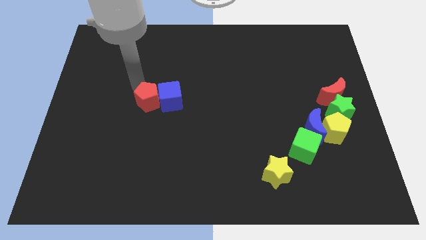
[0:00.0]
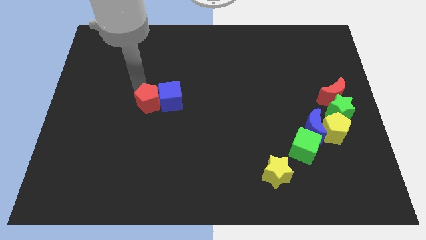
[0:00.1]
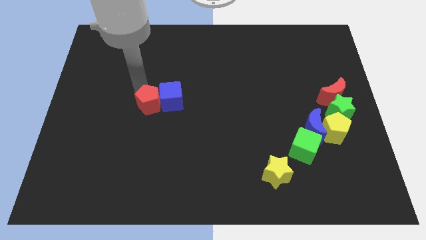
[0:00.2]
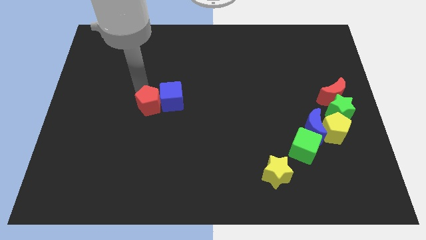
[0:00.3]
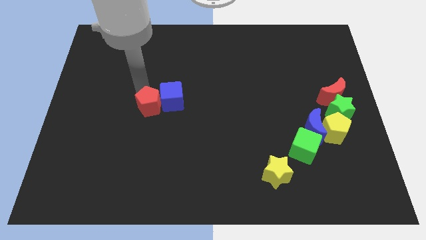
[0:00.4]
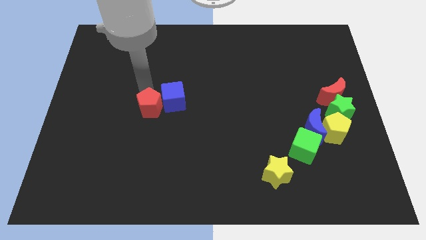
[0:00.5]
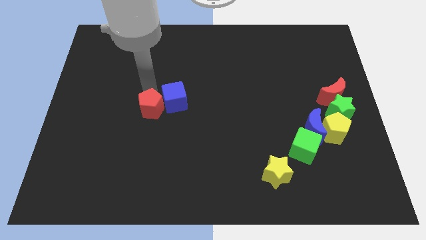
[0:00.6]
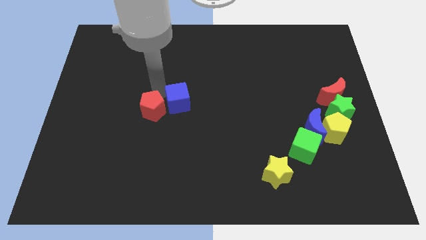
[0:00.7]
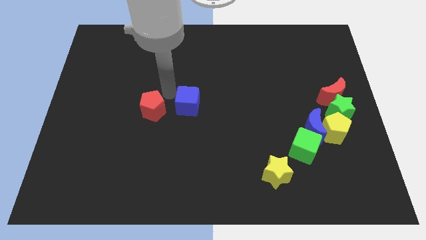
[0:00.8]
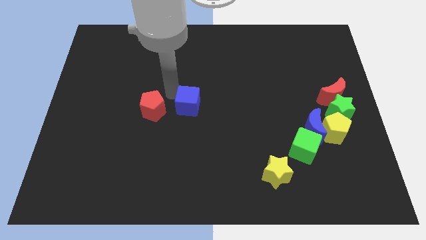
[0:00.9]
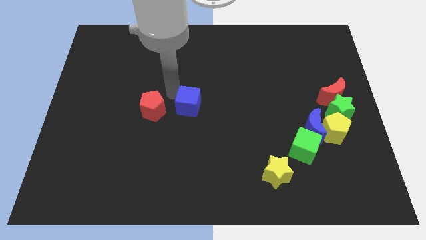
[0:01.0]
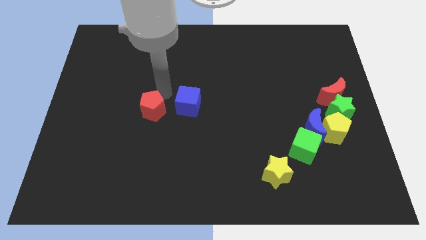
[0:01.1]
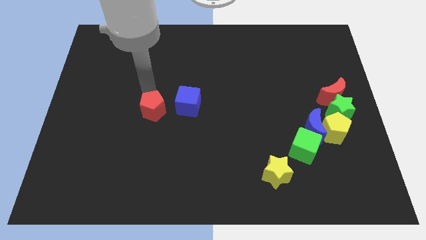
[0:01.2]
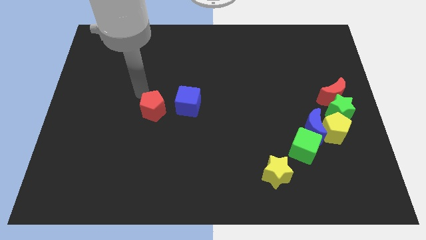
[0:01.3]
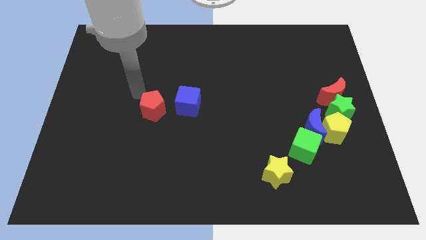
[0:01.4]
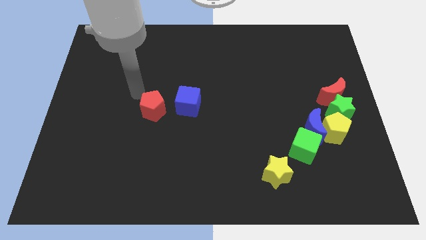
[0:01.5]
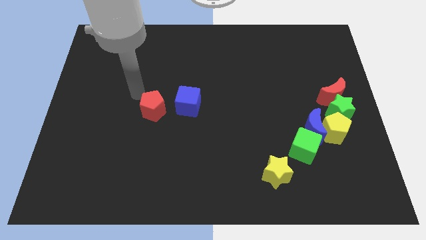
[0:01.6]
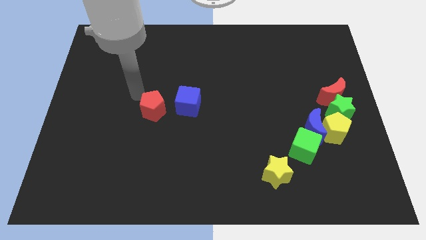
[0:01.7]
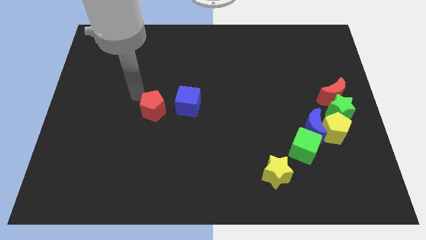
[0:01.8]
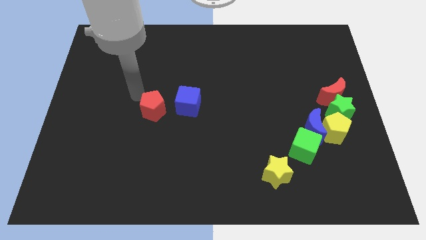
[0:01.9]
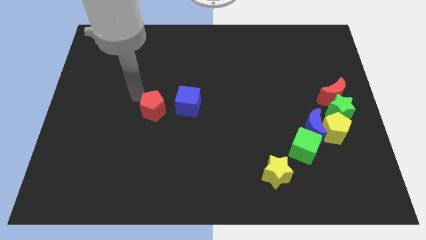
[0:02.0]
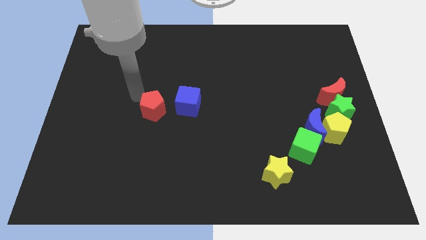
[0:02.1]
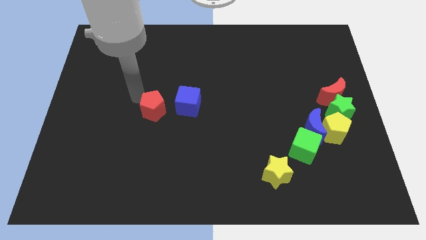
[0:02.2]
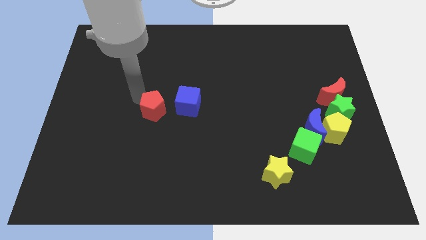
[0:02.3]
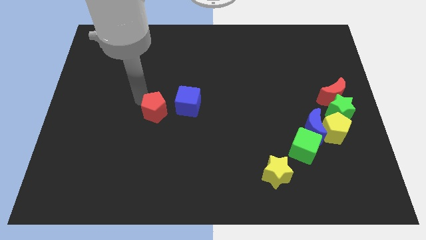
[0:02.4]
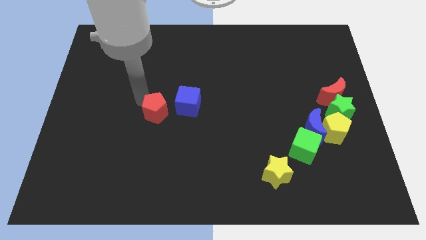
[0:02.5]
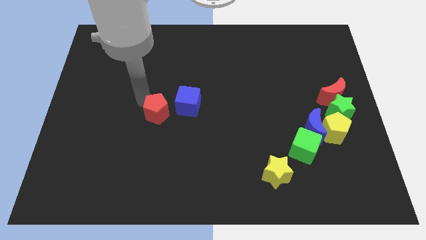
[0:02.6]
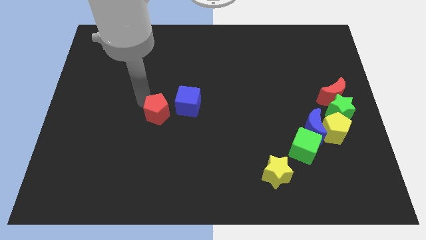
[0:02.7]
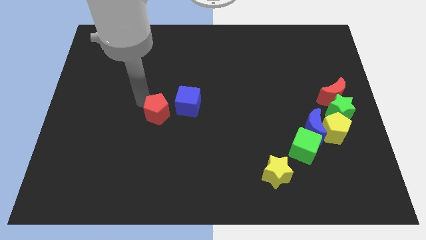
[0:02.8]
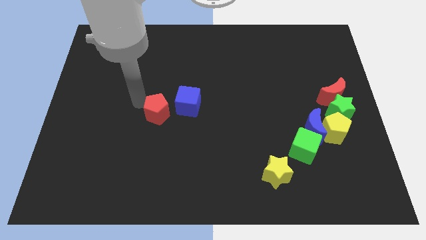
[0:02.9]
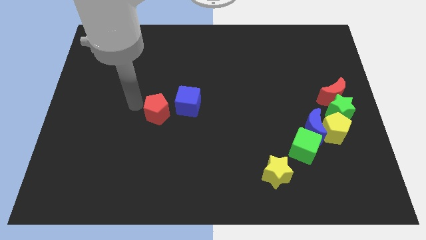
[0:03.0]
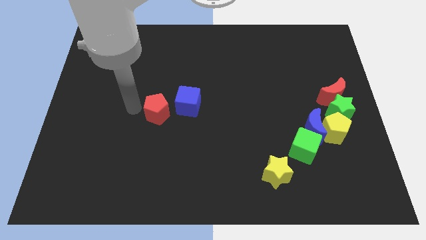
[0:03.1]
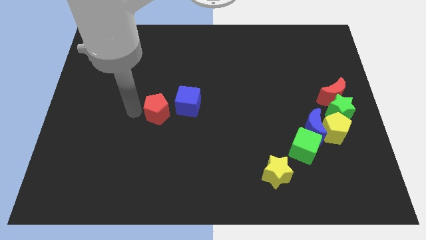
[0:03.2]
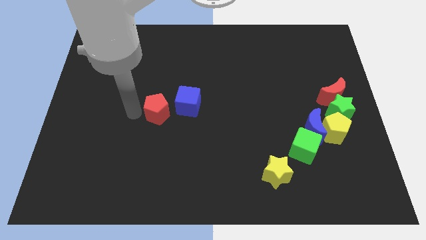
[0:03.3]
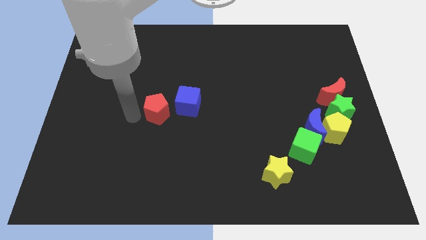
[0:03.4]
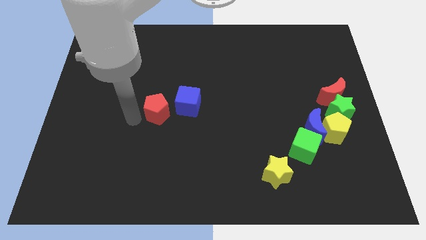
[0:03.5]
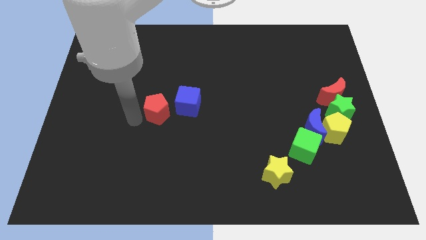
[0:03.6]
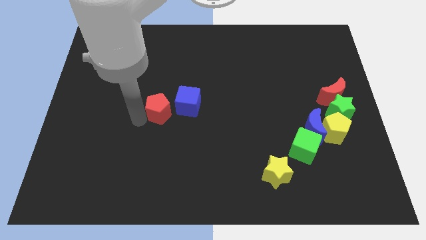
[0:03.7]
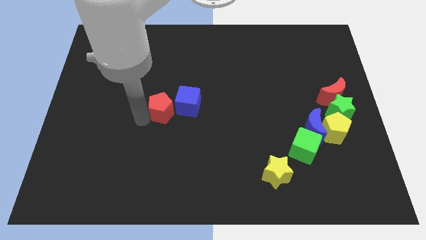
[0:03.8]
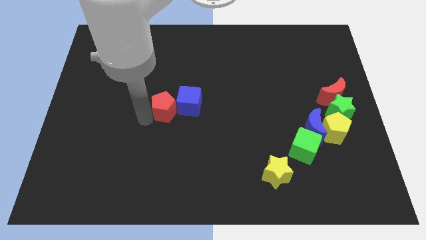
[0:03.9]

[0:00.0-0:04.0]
push red pentagon into blue cube

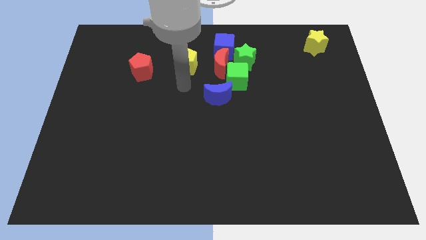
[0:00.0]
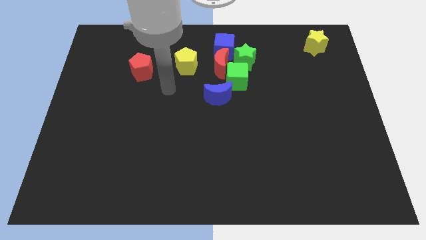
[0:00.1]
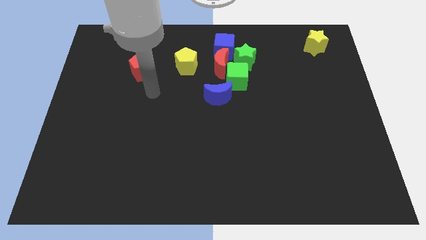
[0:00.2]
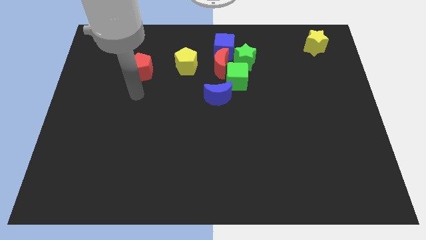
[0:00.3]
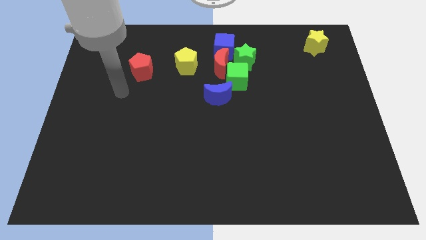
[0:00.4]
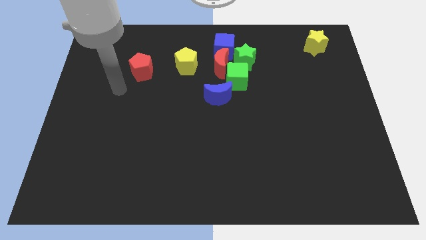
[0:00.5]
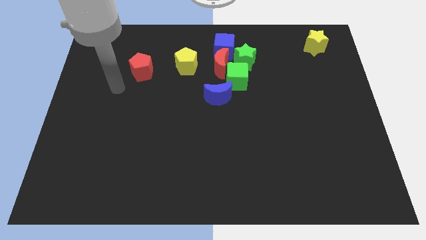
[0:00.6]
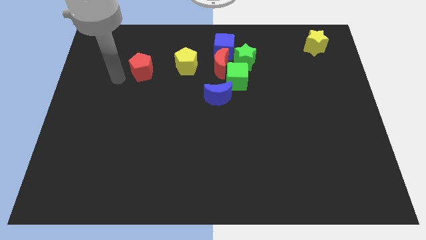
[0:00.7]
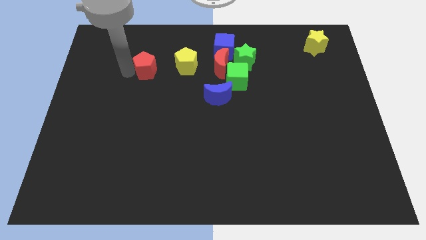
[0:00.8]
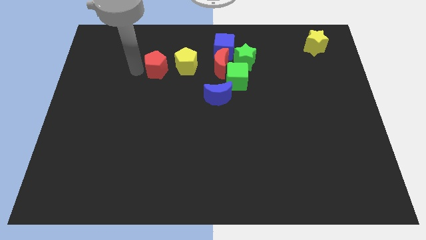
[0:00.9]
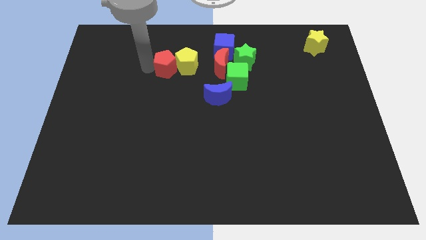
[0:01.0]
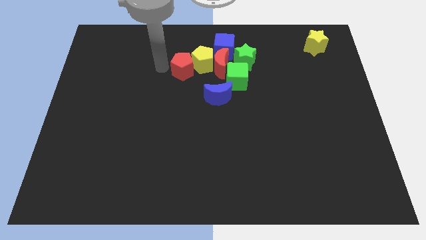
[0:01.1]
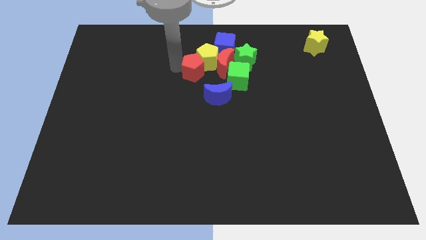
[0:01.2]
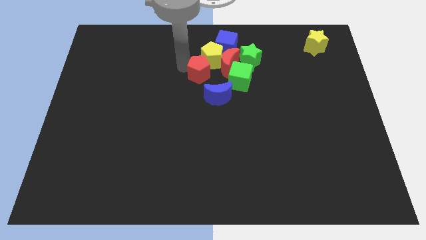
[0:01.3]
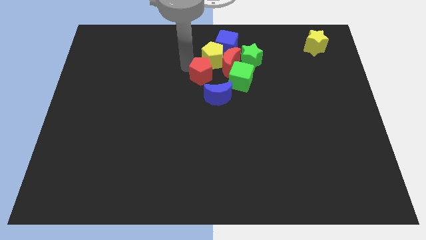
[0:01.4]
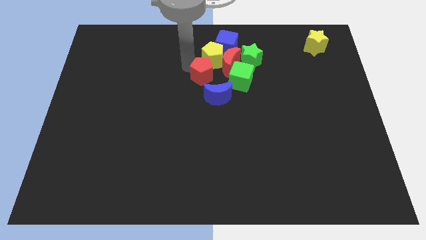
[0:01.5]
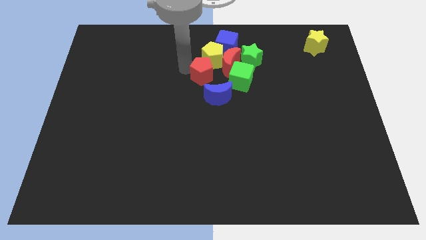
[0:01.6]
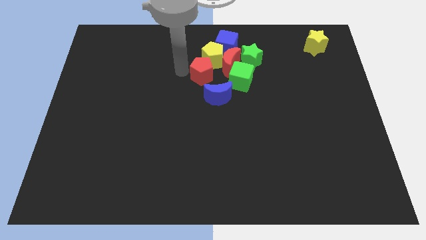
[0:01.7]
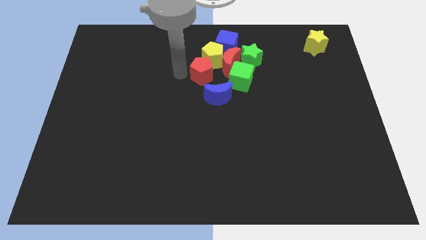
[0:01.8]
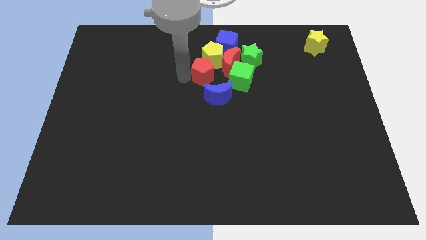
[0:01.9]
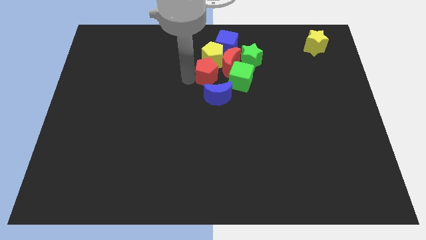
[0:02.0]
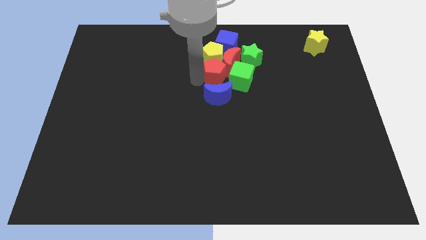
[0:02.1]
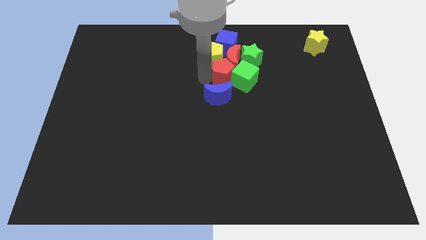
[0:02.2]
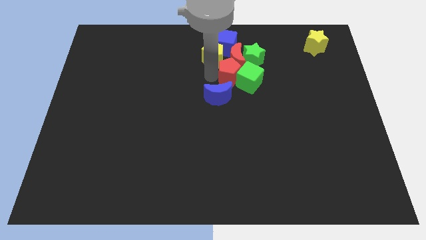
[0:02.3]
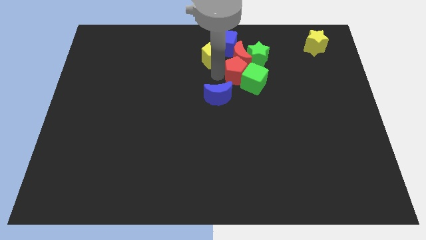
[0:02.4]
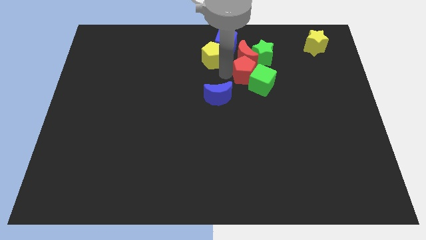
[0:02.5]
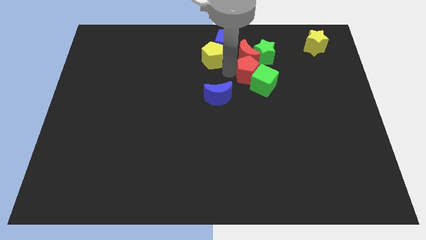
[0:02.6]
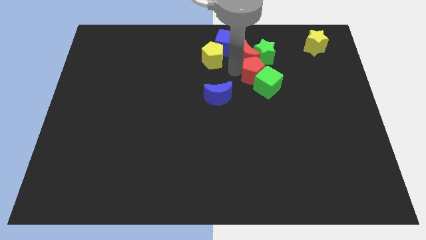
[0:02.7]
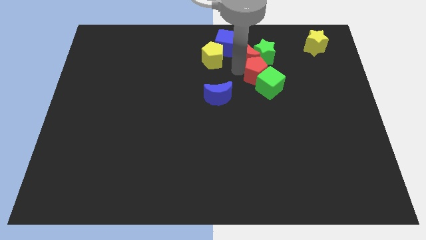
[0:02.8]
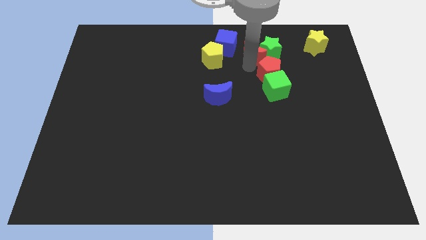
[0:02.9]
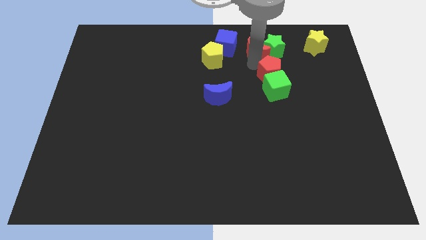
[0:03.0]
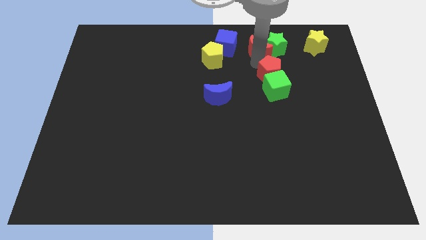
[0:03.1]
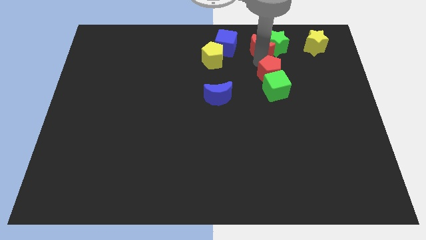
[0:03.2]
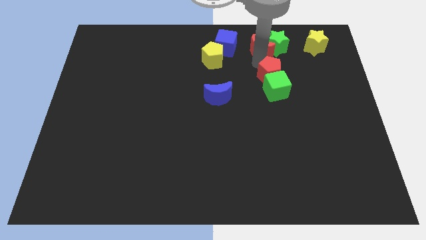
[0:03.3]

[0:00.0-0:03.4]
place the red pentagon in between red moon and green cube

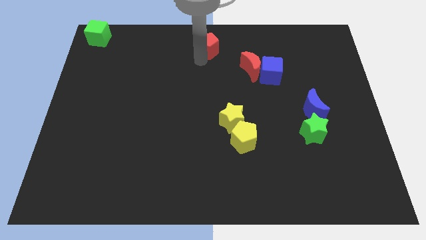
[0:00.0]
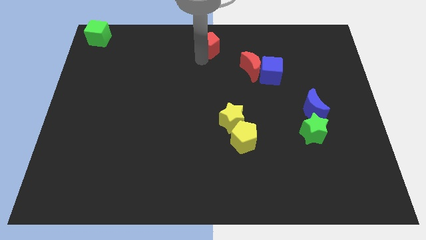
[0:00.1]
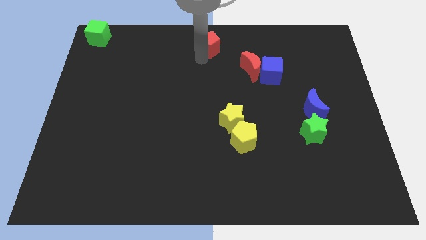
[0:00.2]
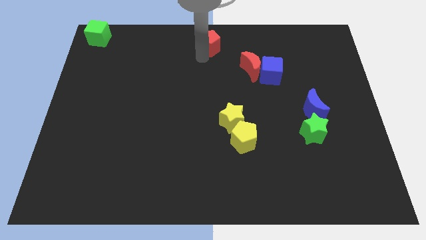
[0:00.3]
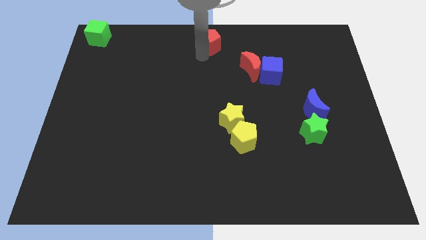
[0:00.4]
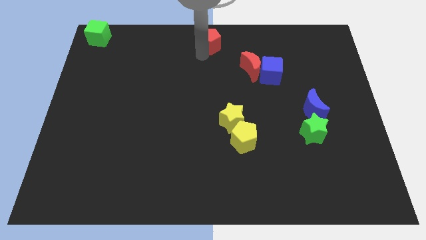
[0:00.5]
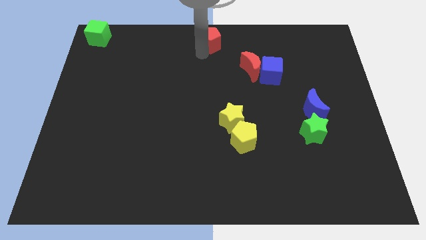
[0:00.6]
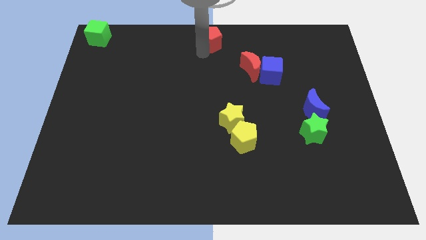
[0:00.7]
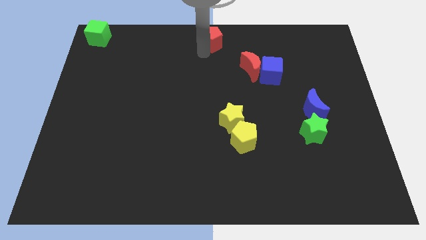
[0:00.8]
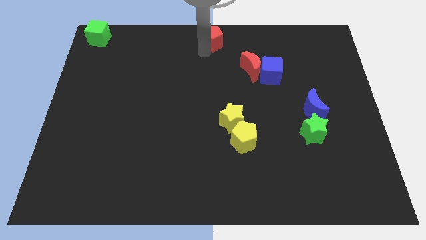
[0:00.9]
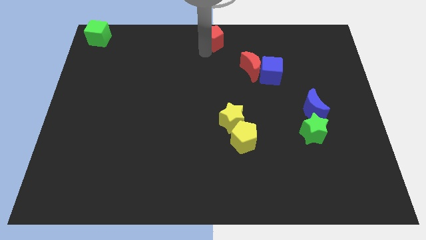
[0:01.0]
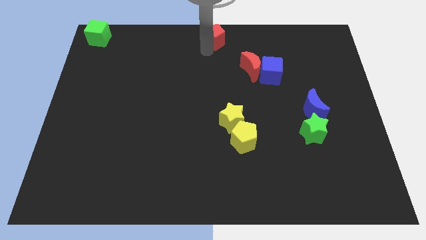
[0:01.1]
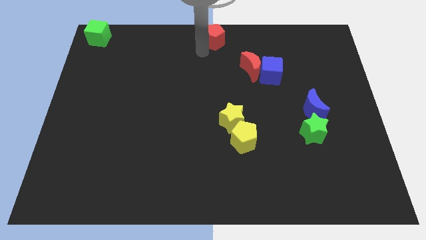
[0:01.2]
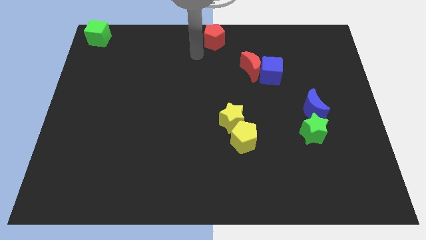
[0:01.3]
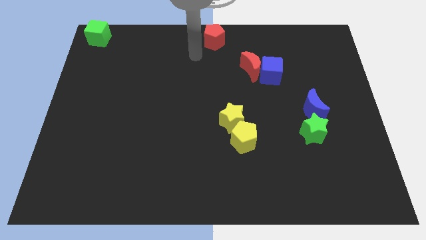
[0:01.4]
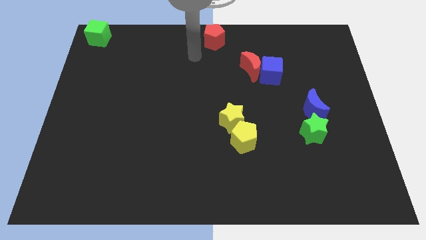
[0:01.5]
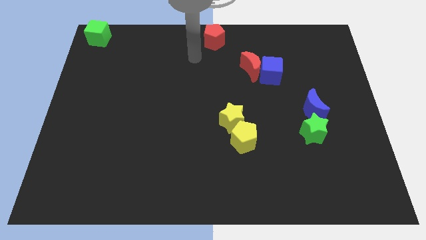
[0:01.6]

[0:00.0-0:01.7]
slightly push red pentagon upwards
